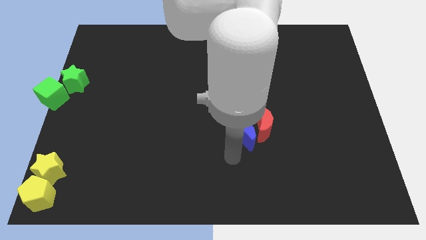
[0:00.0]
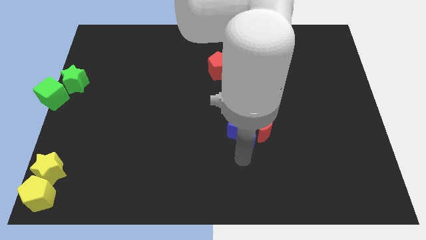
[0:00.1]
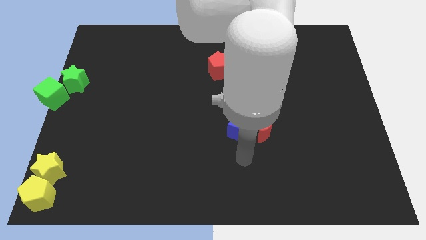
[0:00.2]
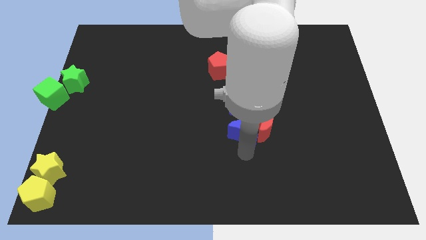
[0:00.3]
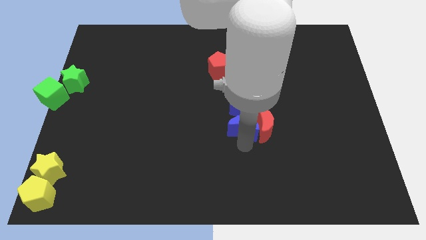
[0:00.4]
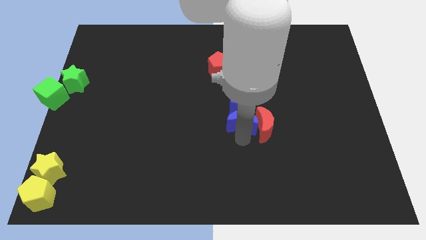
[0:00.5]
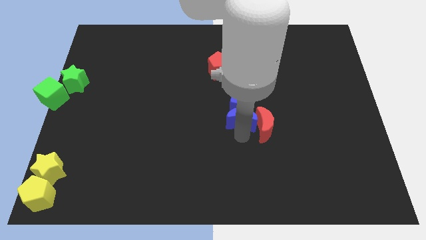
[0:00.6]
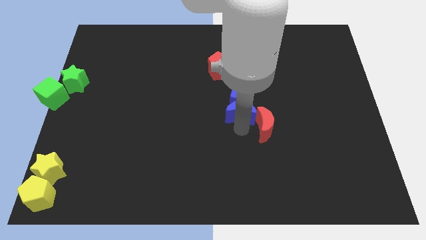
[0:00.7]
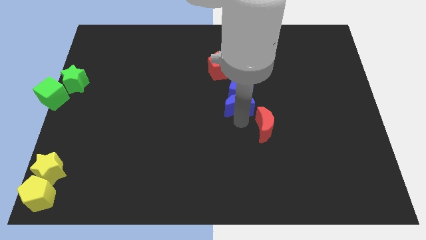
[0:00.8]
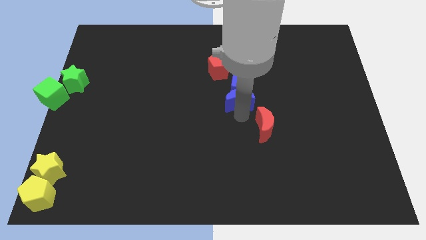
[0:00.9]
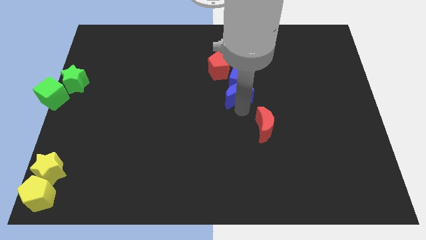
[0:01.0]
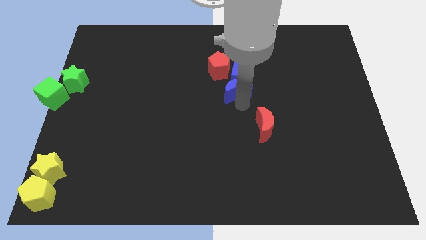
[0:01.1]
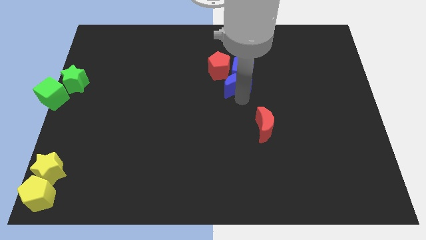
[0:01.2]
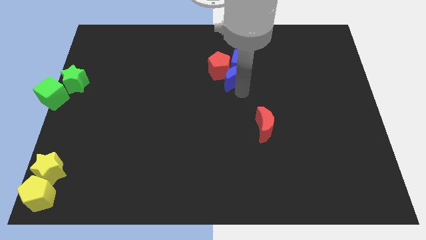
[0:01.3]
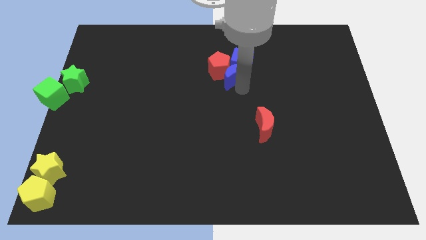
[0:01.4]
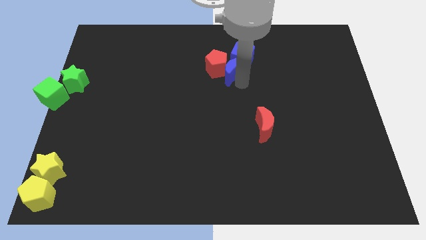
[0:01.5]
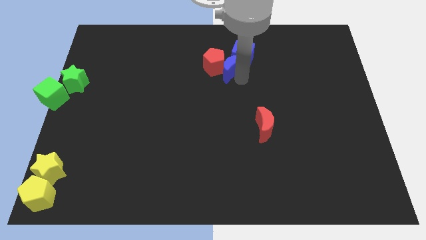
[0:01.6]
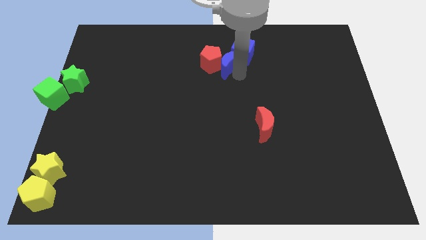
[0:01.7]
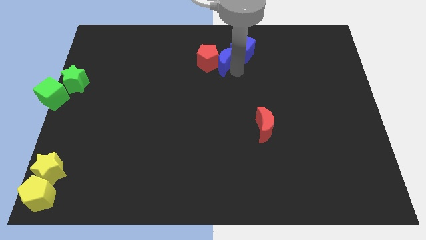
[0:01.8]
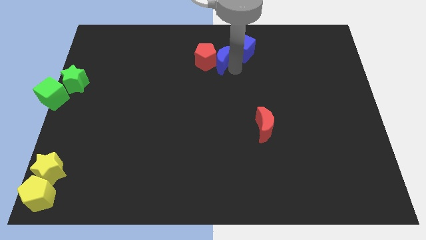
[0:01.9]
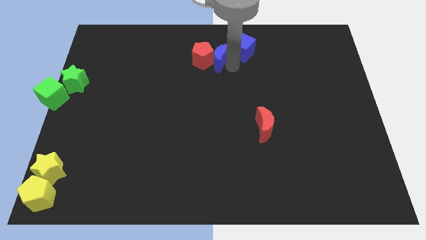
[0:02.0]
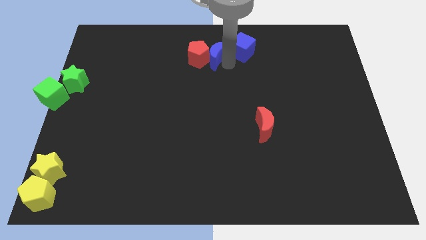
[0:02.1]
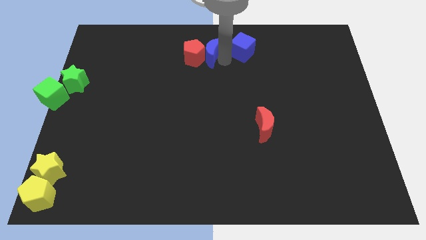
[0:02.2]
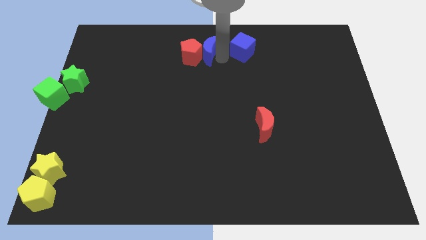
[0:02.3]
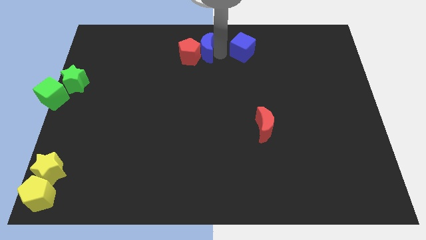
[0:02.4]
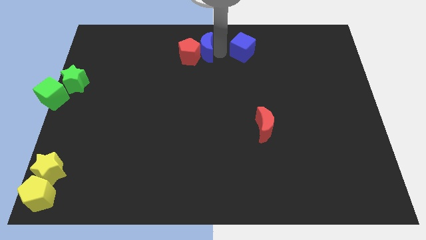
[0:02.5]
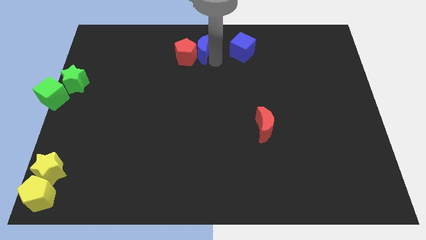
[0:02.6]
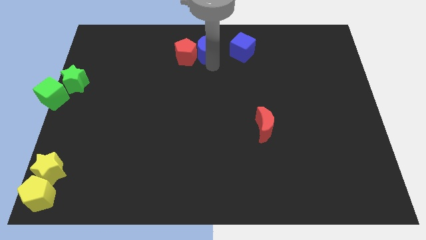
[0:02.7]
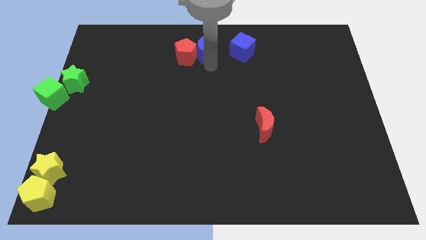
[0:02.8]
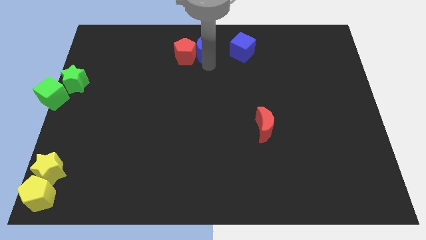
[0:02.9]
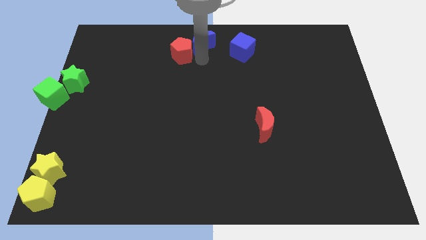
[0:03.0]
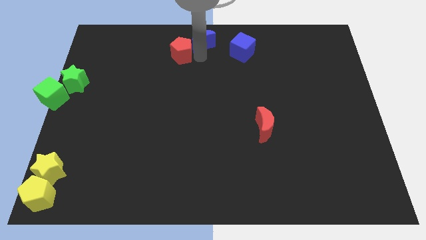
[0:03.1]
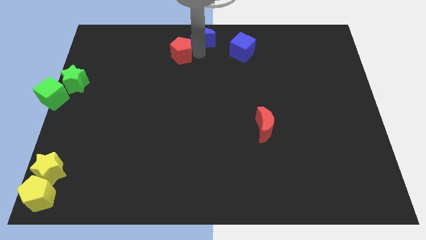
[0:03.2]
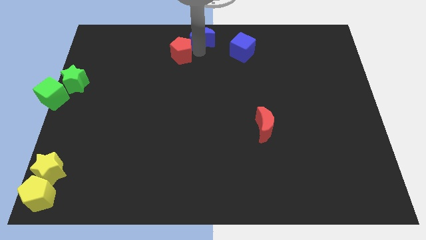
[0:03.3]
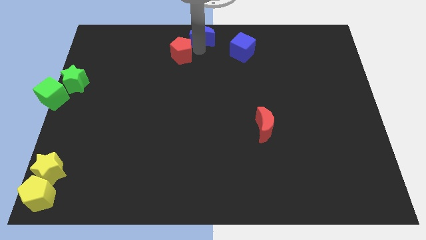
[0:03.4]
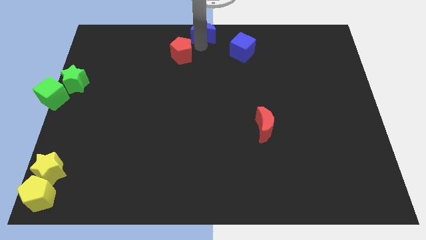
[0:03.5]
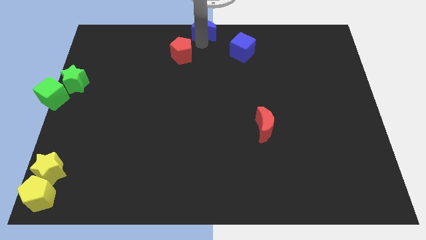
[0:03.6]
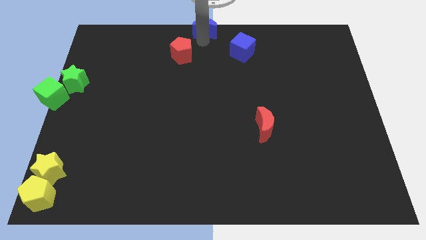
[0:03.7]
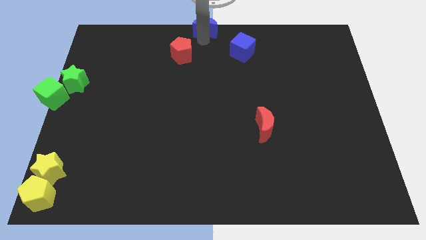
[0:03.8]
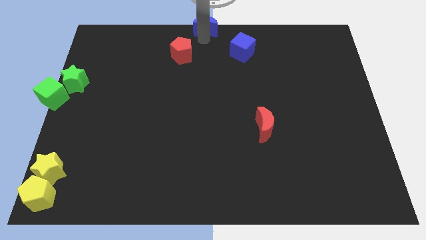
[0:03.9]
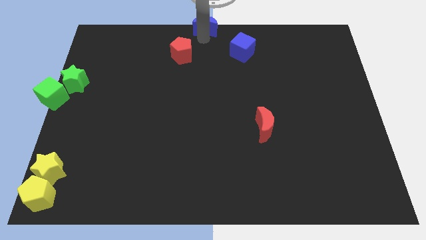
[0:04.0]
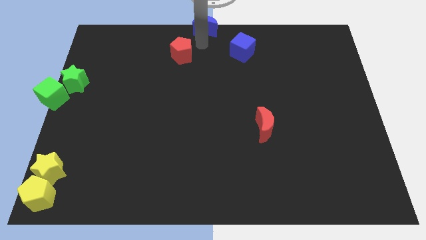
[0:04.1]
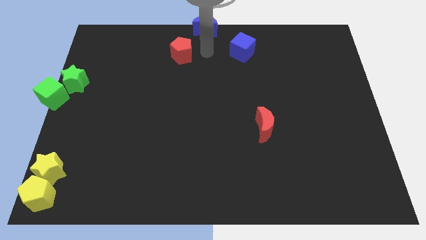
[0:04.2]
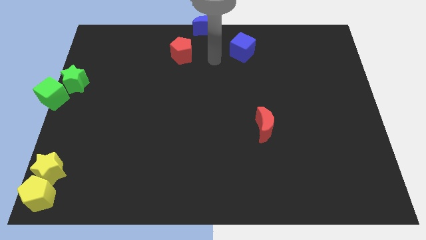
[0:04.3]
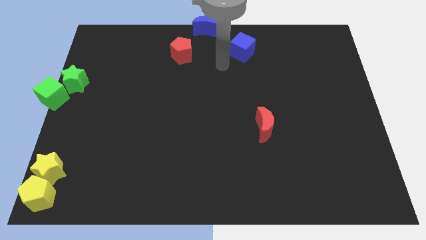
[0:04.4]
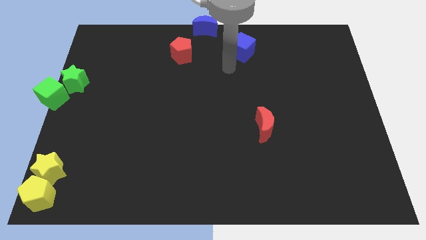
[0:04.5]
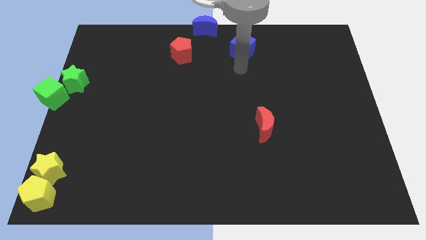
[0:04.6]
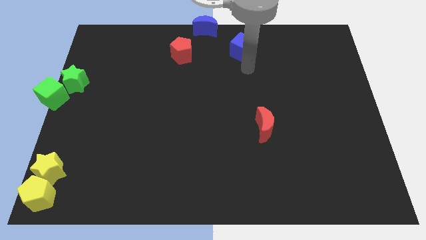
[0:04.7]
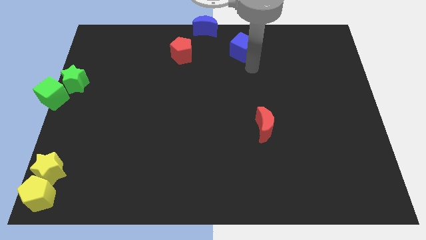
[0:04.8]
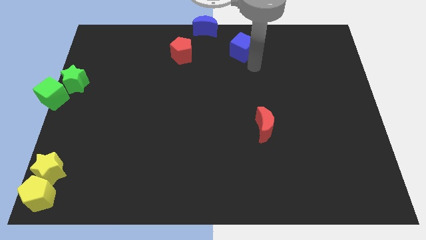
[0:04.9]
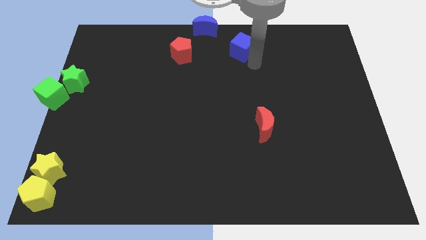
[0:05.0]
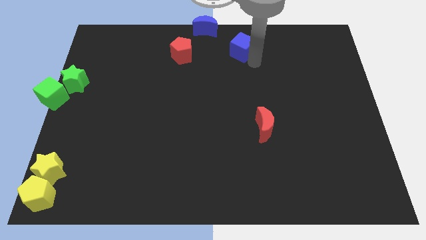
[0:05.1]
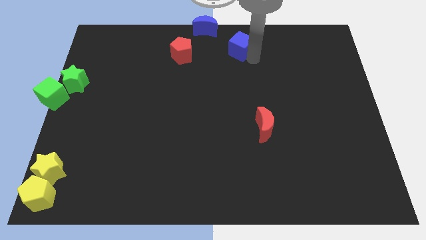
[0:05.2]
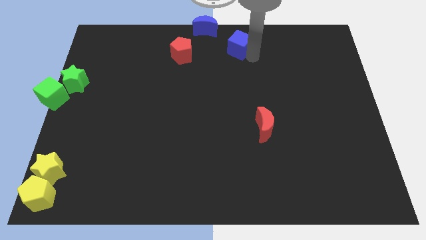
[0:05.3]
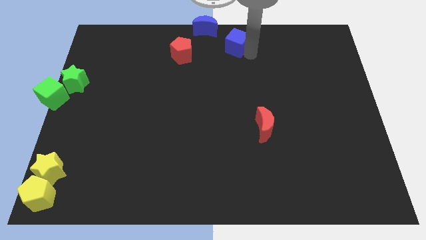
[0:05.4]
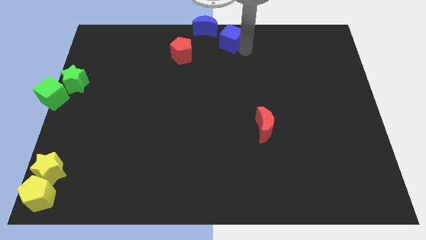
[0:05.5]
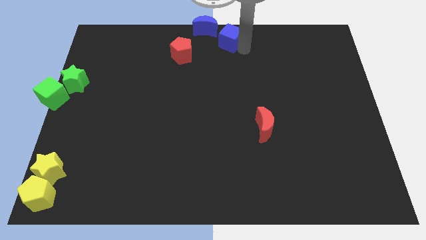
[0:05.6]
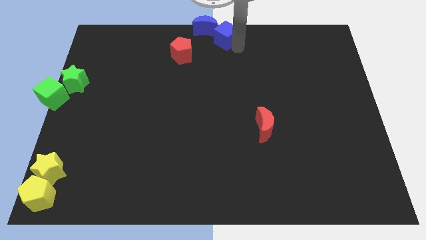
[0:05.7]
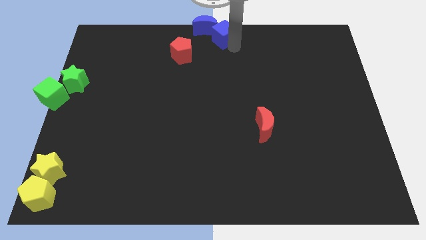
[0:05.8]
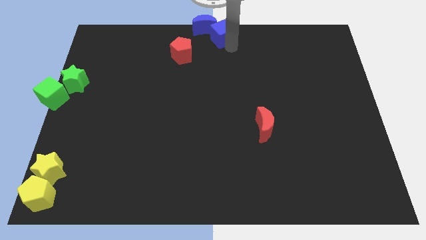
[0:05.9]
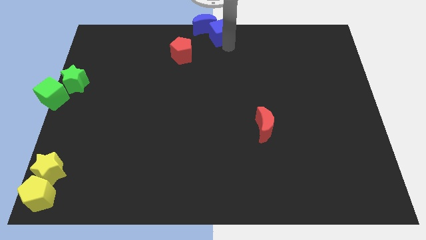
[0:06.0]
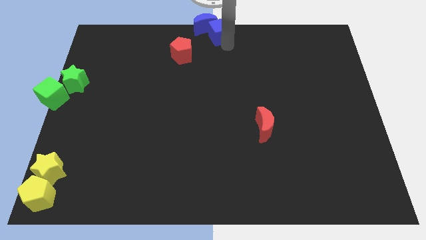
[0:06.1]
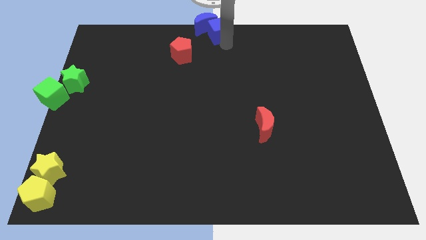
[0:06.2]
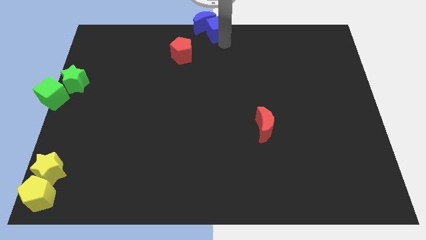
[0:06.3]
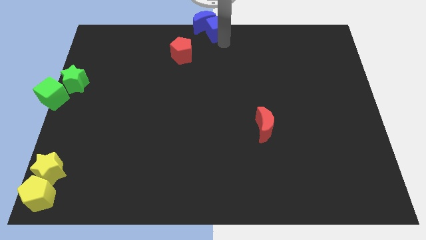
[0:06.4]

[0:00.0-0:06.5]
push the blue blocks to the top center

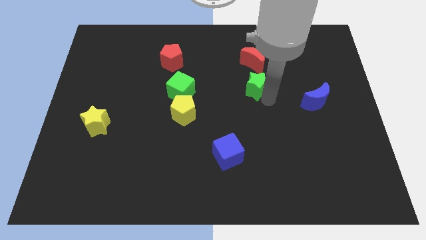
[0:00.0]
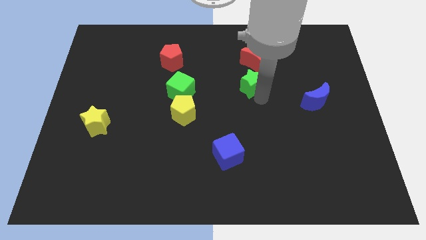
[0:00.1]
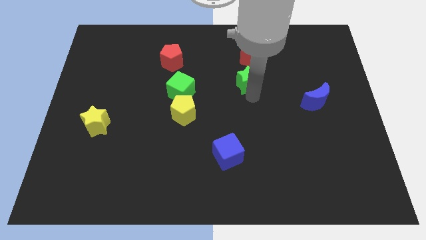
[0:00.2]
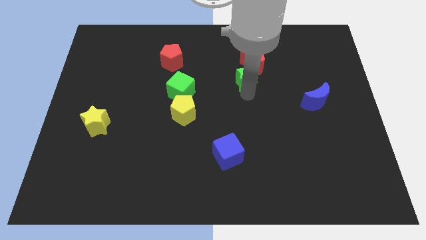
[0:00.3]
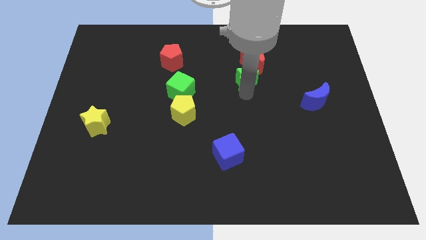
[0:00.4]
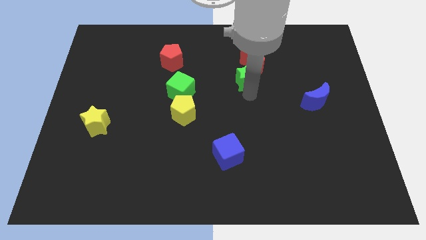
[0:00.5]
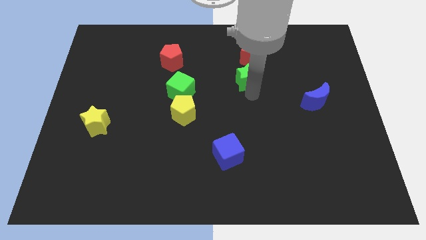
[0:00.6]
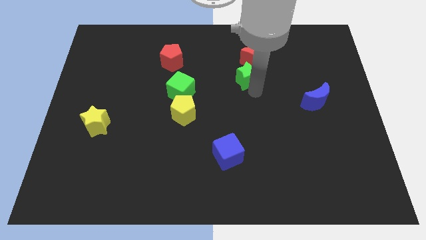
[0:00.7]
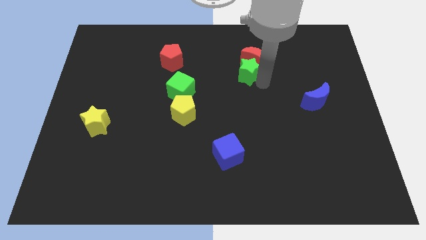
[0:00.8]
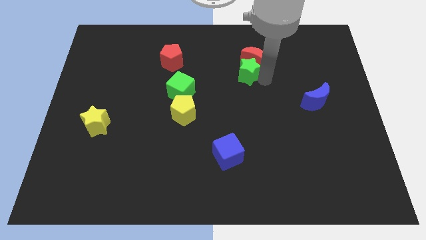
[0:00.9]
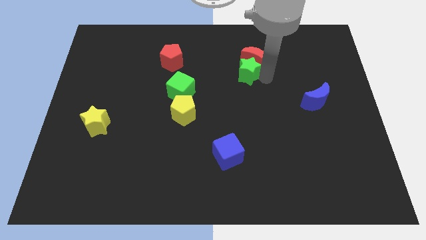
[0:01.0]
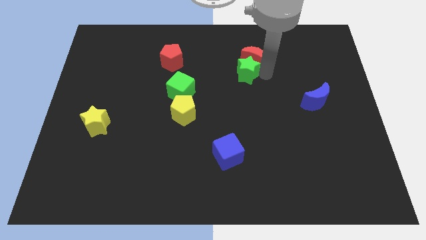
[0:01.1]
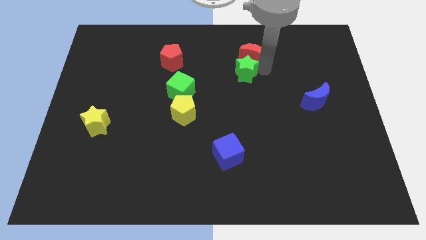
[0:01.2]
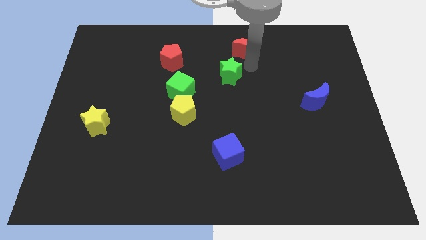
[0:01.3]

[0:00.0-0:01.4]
move green star into the red moon

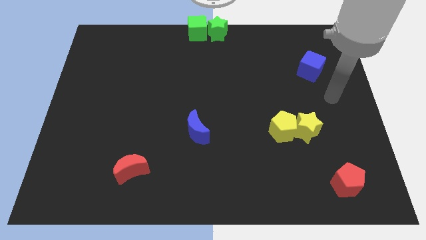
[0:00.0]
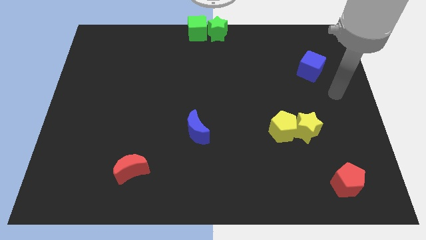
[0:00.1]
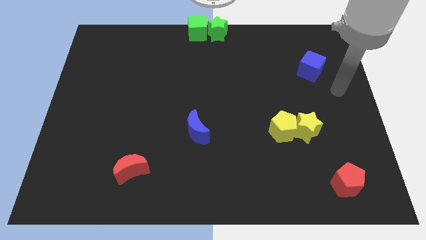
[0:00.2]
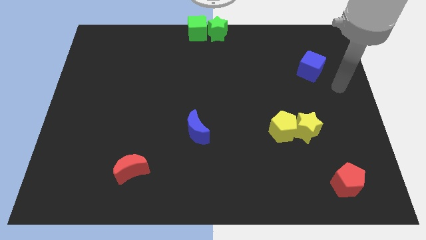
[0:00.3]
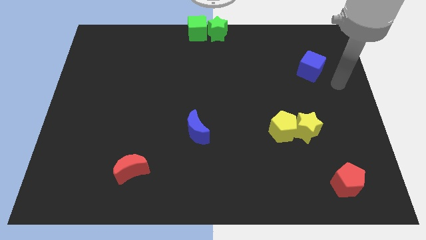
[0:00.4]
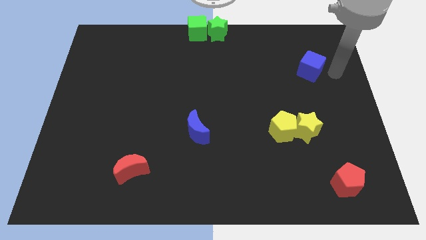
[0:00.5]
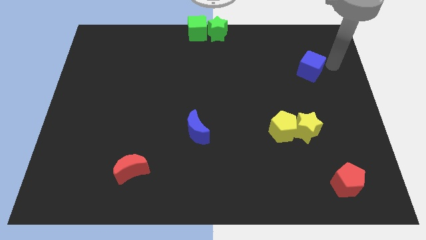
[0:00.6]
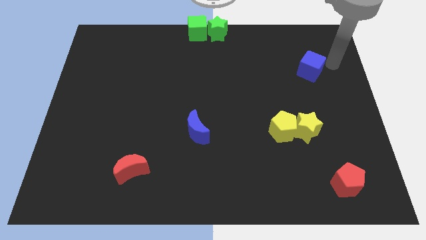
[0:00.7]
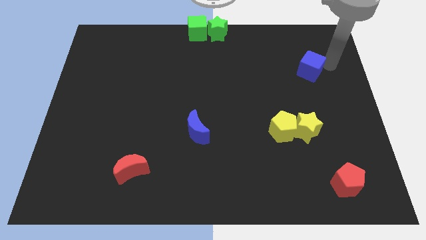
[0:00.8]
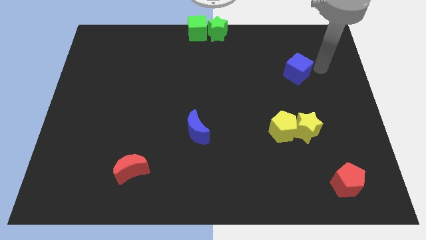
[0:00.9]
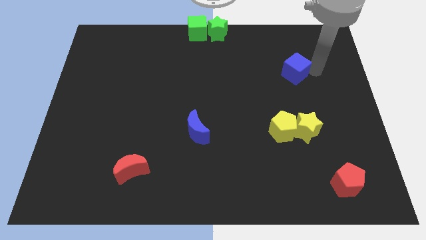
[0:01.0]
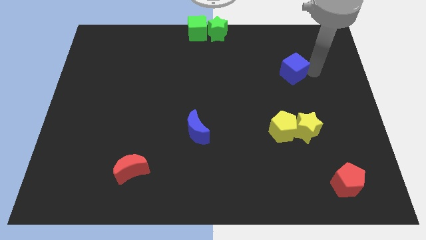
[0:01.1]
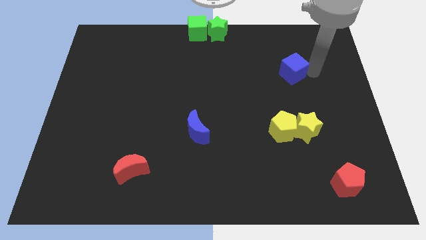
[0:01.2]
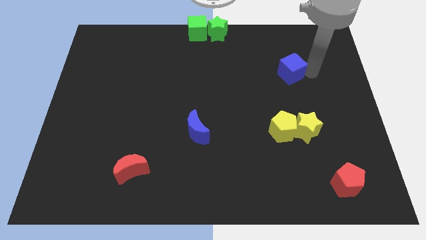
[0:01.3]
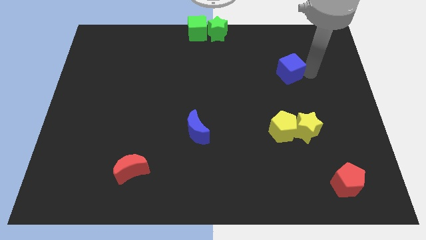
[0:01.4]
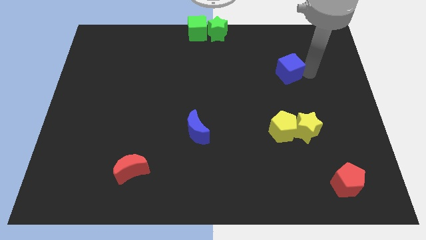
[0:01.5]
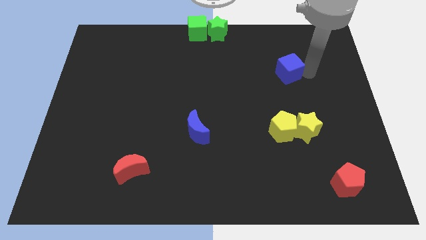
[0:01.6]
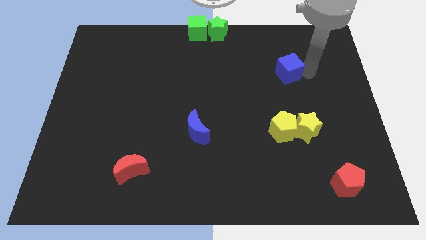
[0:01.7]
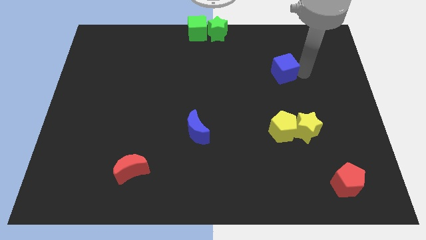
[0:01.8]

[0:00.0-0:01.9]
place blue cube to the top of yellow pentagon
